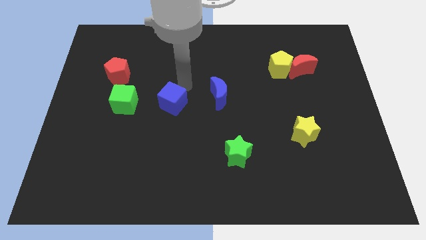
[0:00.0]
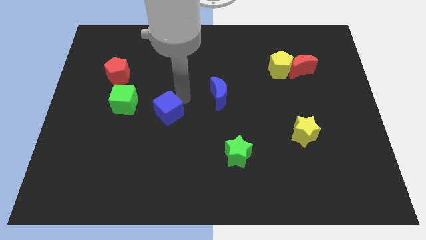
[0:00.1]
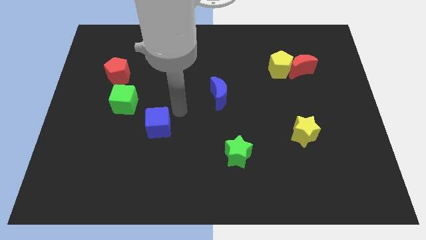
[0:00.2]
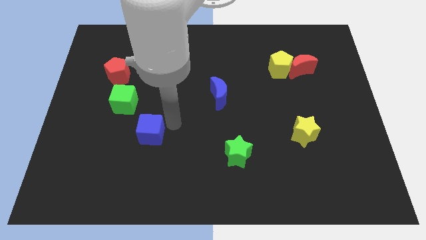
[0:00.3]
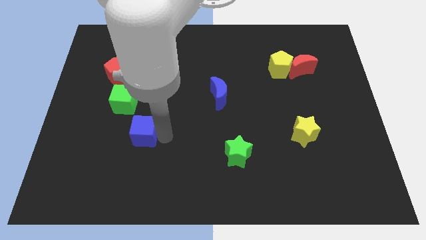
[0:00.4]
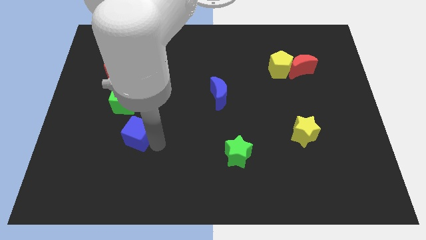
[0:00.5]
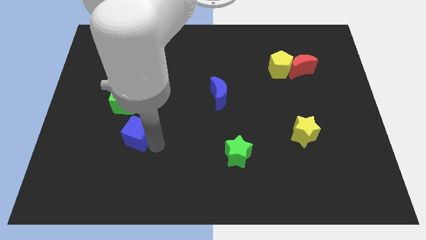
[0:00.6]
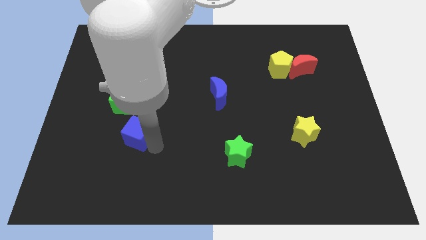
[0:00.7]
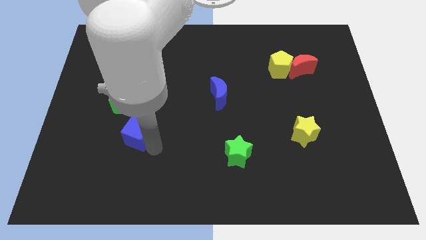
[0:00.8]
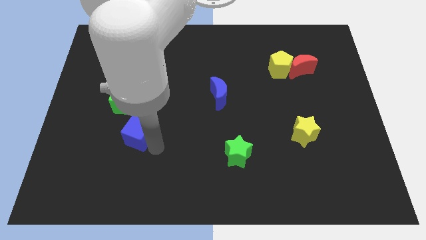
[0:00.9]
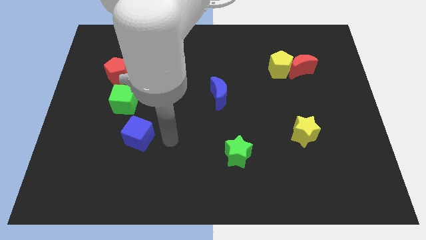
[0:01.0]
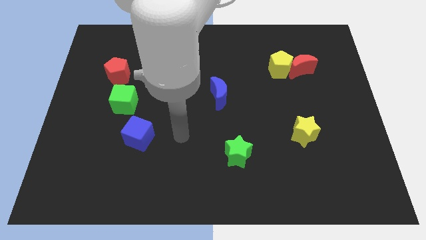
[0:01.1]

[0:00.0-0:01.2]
place blue cube below green cube

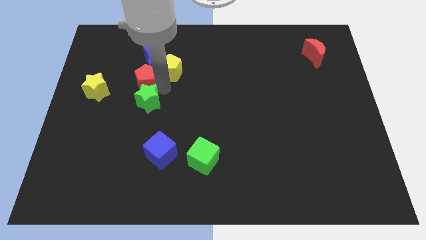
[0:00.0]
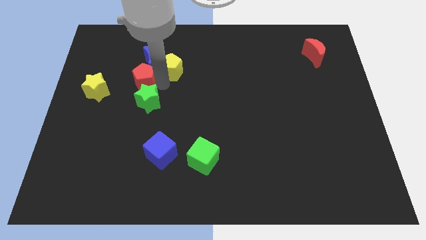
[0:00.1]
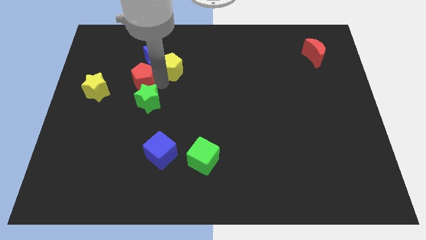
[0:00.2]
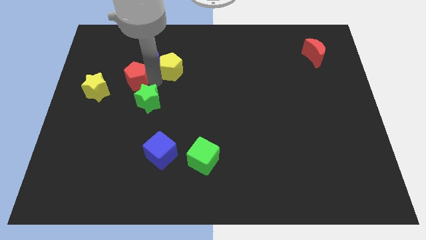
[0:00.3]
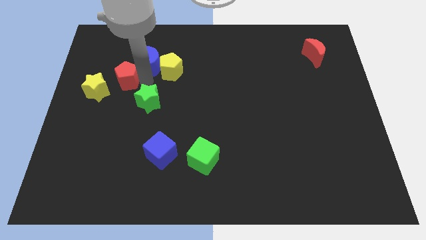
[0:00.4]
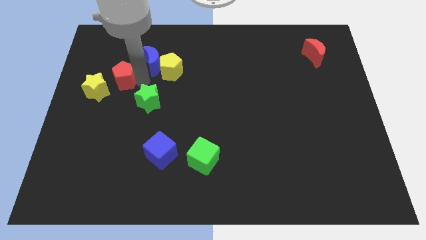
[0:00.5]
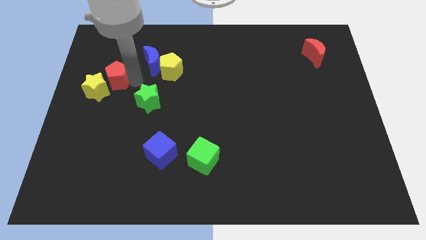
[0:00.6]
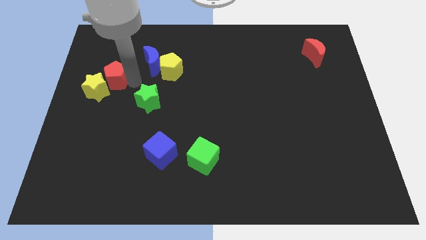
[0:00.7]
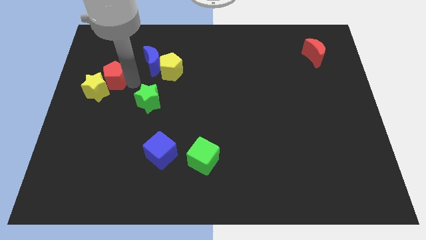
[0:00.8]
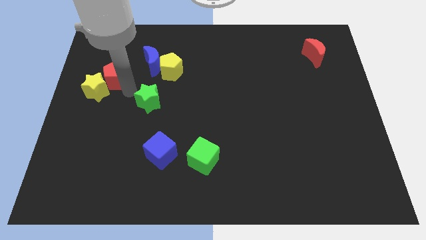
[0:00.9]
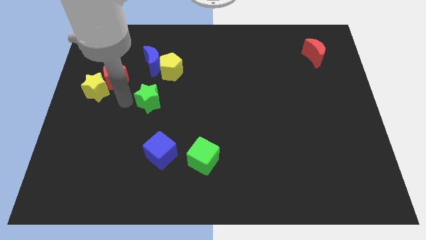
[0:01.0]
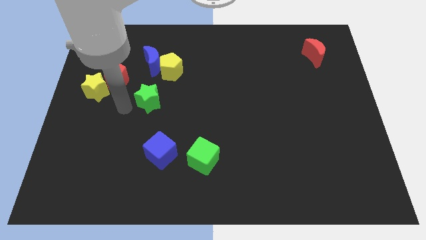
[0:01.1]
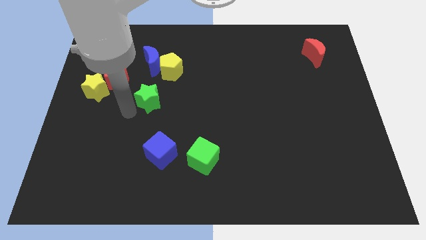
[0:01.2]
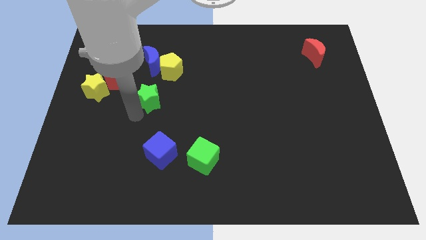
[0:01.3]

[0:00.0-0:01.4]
move the red pentagon to the top right side of the yellow star

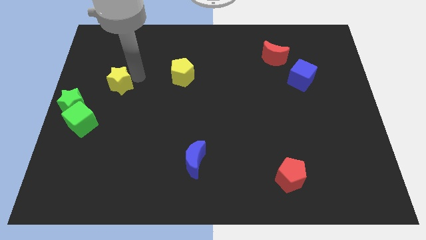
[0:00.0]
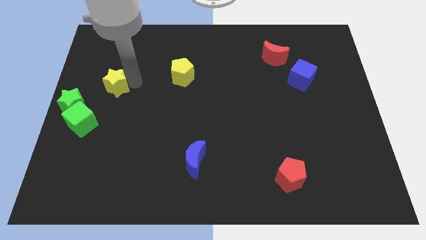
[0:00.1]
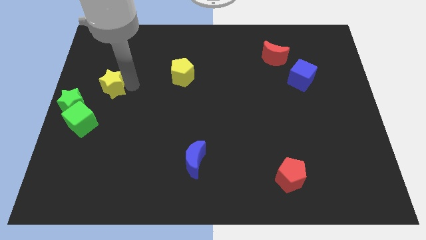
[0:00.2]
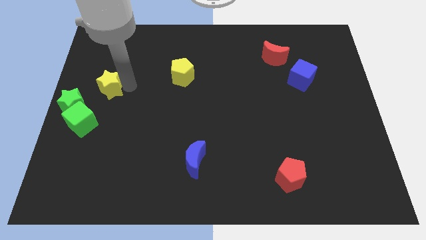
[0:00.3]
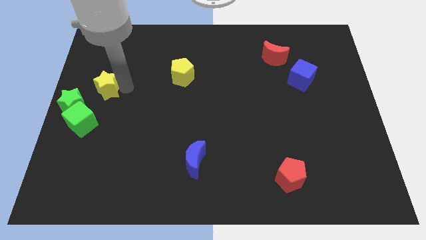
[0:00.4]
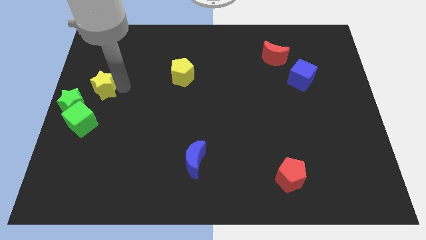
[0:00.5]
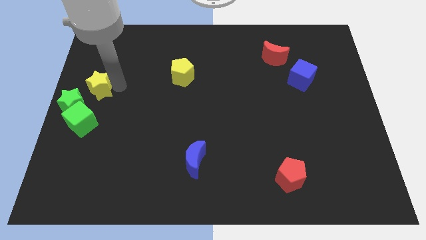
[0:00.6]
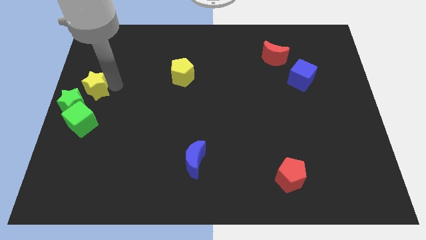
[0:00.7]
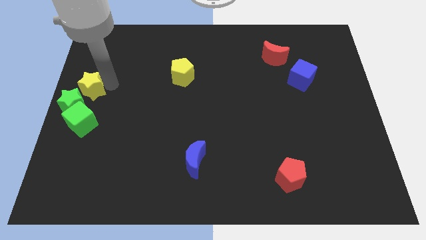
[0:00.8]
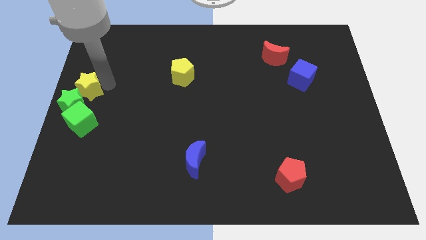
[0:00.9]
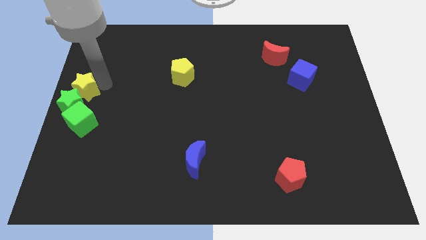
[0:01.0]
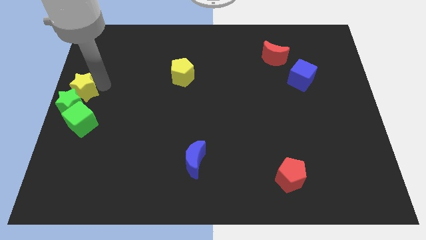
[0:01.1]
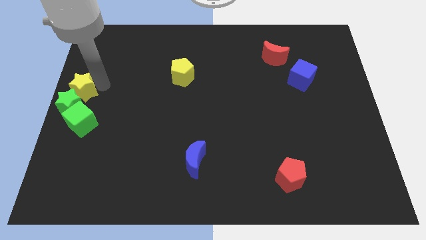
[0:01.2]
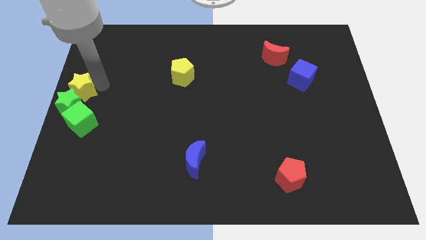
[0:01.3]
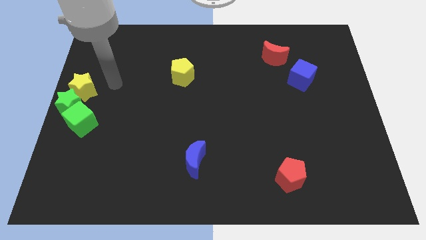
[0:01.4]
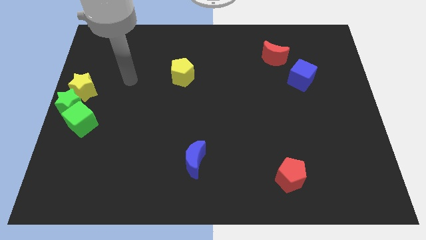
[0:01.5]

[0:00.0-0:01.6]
push the yellow star into green star

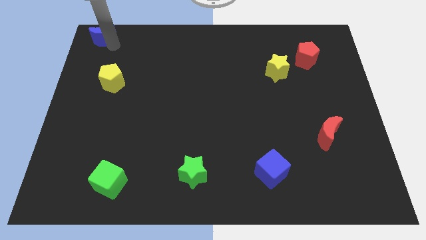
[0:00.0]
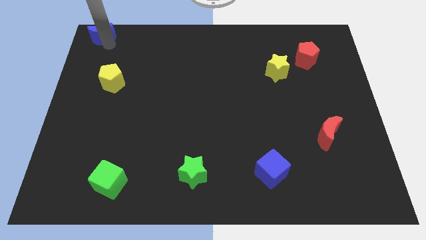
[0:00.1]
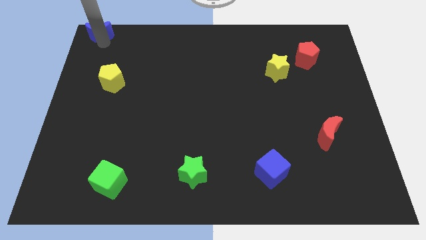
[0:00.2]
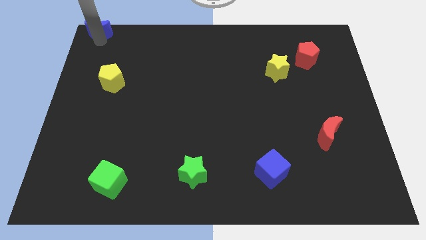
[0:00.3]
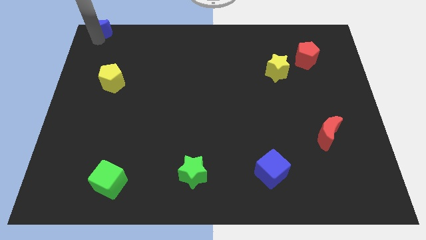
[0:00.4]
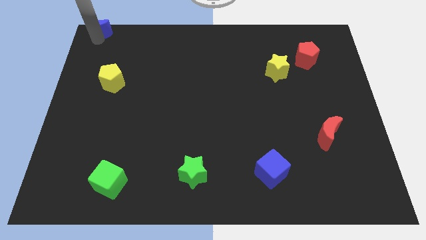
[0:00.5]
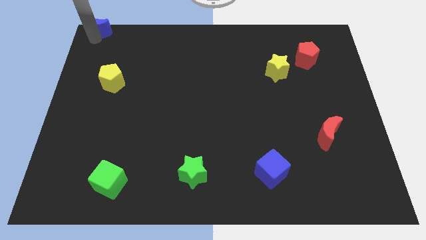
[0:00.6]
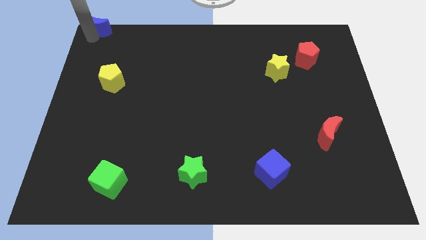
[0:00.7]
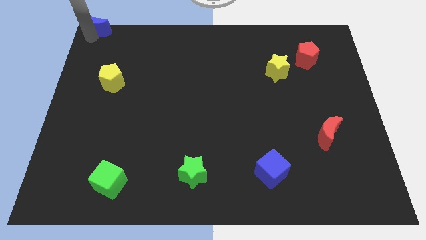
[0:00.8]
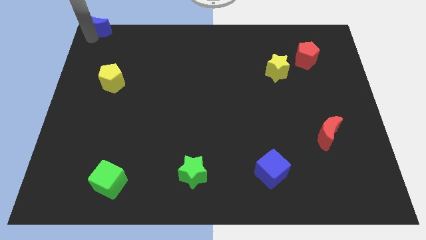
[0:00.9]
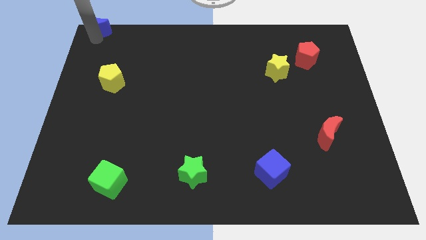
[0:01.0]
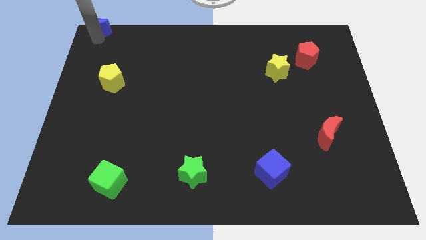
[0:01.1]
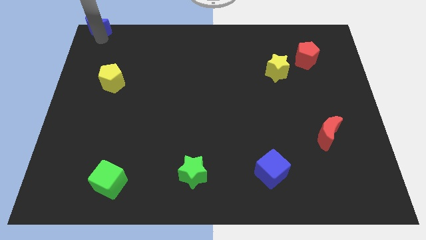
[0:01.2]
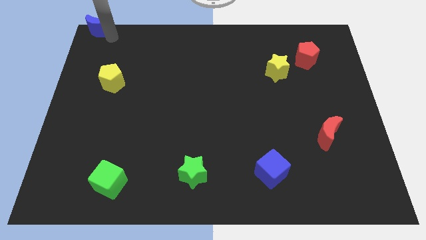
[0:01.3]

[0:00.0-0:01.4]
push the blue moon to the top left

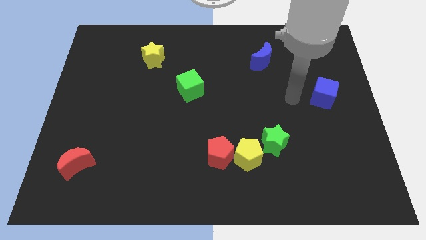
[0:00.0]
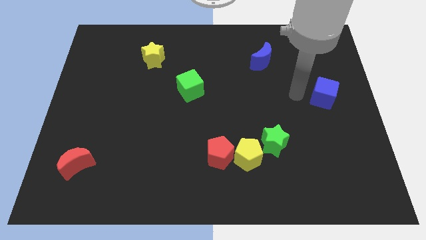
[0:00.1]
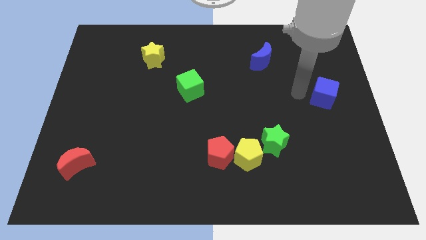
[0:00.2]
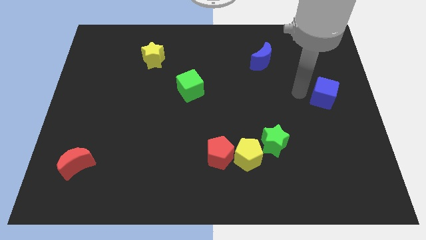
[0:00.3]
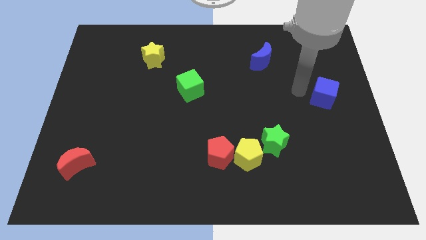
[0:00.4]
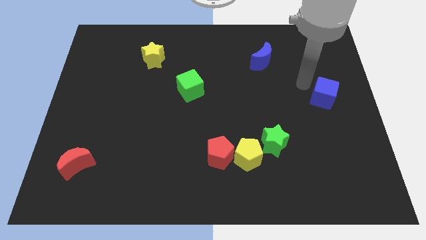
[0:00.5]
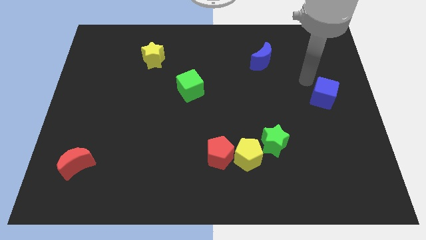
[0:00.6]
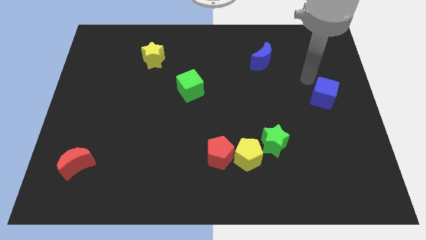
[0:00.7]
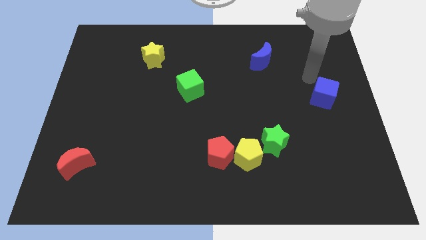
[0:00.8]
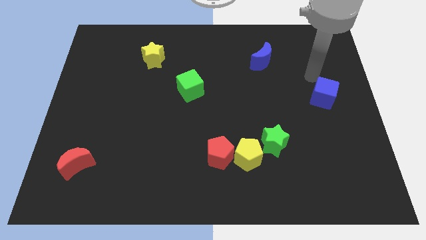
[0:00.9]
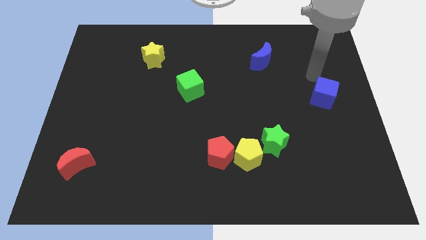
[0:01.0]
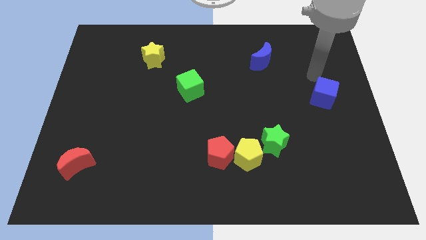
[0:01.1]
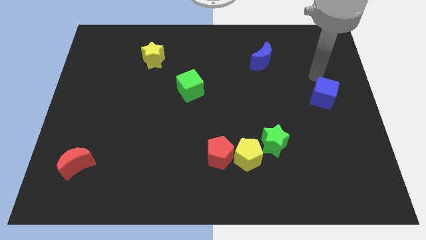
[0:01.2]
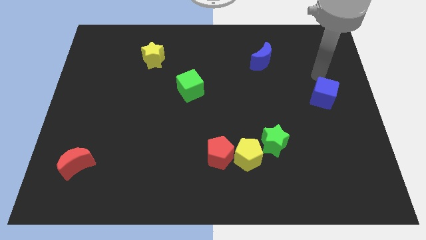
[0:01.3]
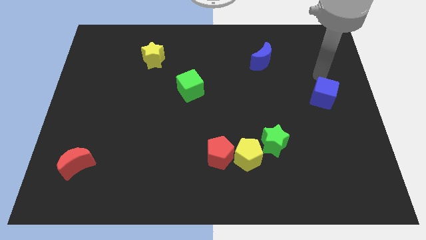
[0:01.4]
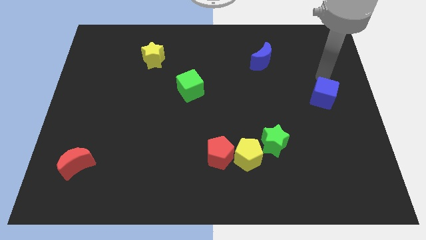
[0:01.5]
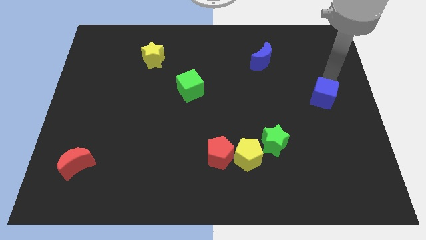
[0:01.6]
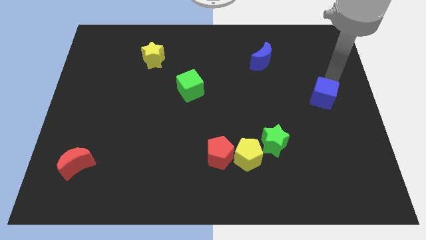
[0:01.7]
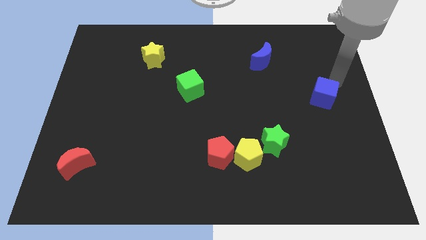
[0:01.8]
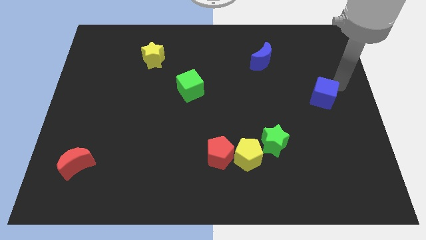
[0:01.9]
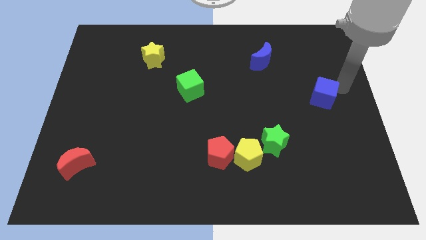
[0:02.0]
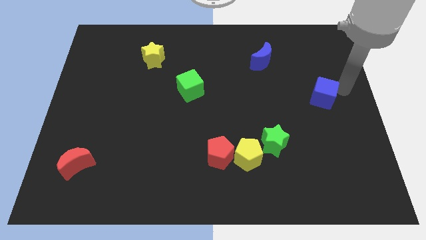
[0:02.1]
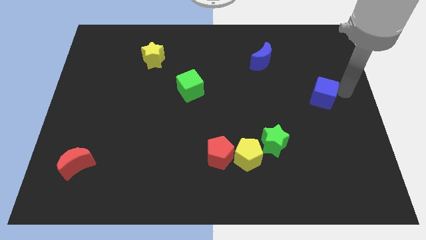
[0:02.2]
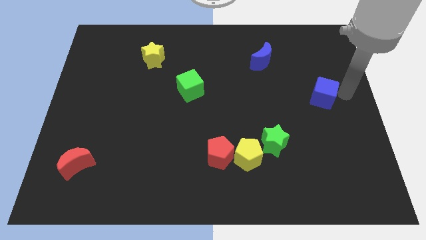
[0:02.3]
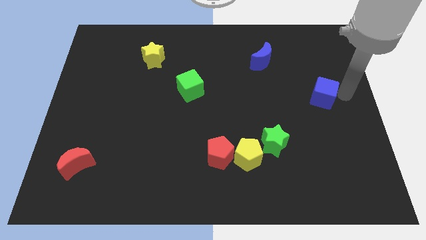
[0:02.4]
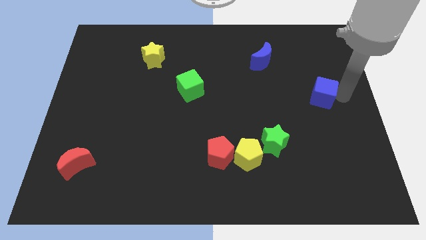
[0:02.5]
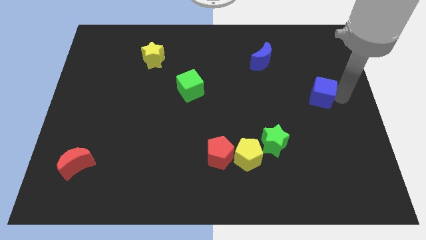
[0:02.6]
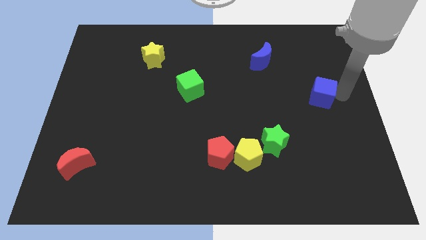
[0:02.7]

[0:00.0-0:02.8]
move your arm to the right of the blue cube

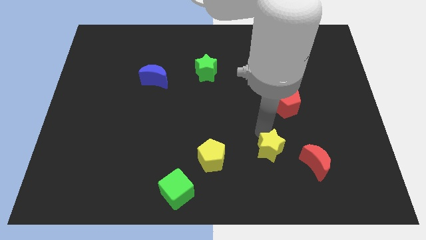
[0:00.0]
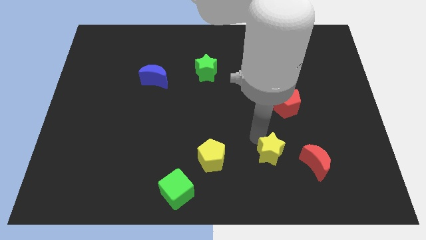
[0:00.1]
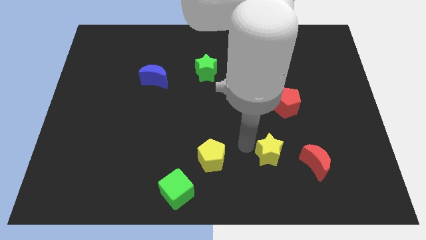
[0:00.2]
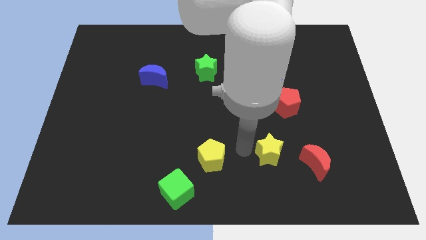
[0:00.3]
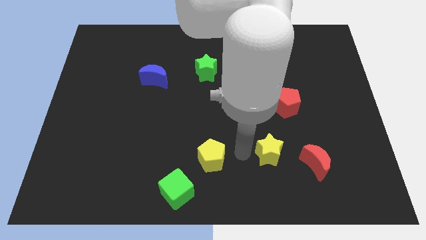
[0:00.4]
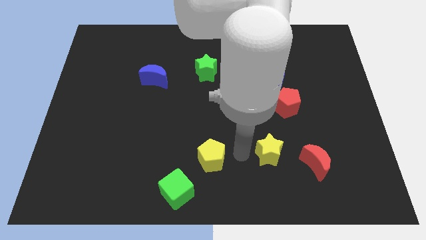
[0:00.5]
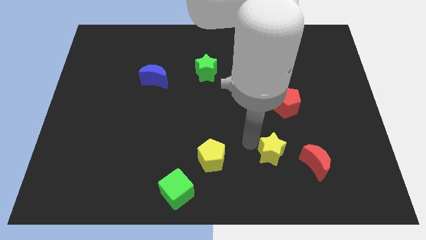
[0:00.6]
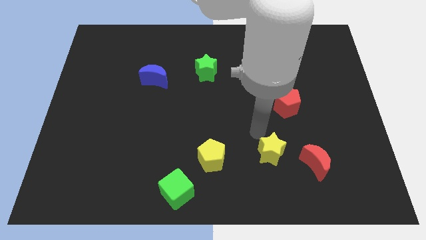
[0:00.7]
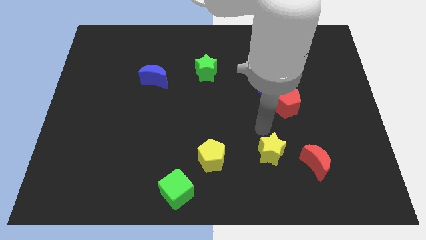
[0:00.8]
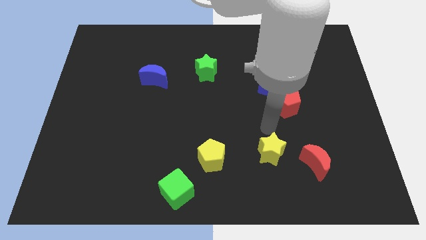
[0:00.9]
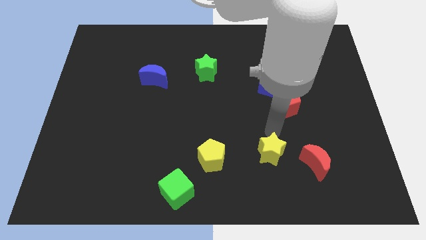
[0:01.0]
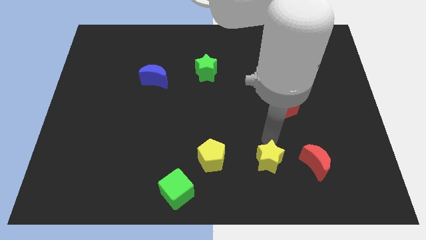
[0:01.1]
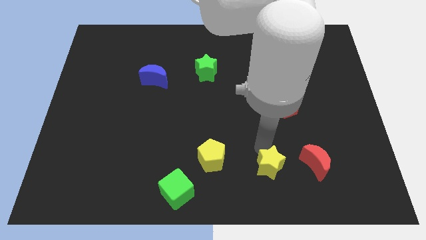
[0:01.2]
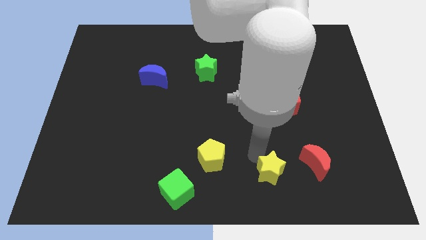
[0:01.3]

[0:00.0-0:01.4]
push the yellow star downward
